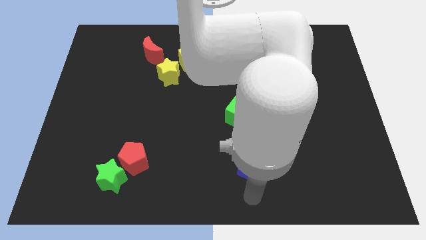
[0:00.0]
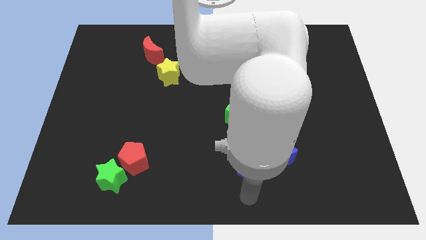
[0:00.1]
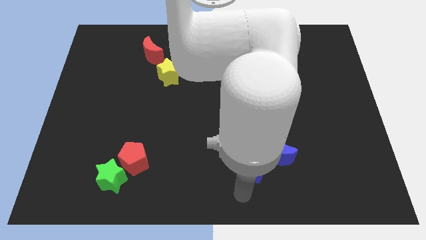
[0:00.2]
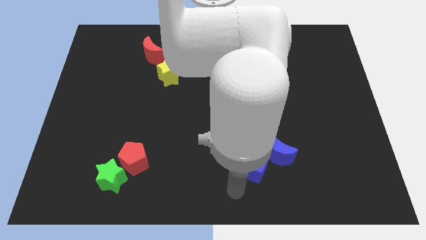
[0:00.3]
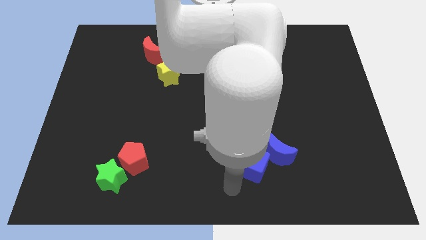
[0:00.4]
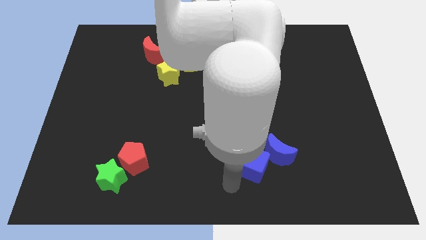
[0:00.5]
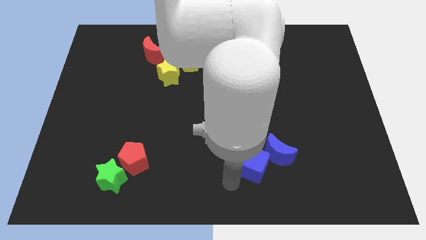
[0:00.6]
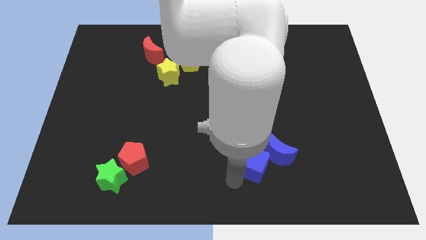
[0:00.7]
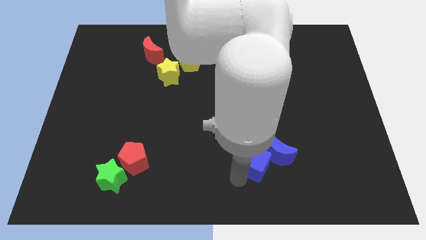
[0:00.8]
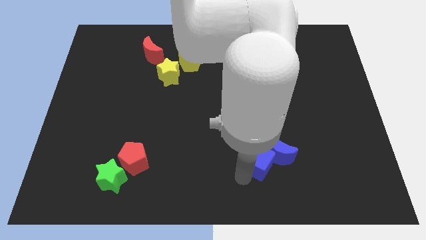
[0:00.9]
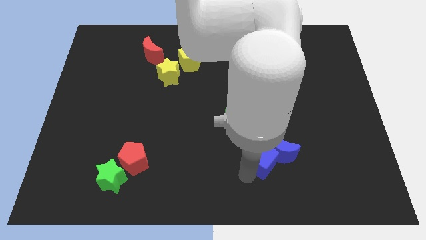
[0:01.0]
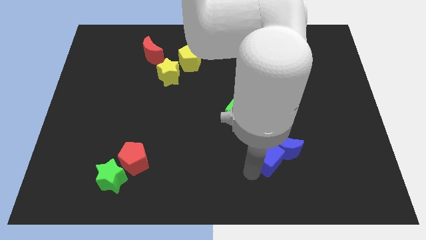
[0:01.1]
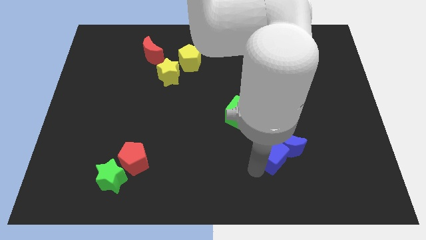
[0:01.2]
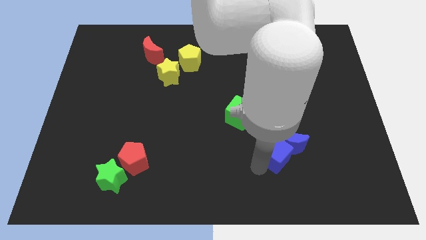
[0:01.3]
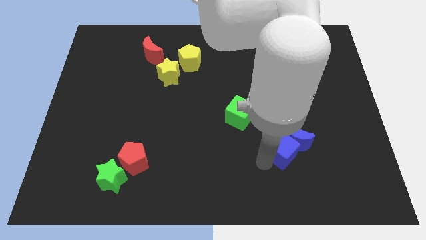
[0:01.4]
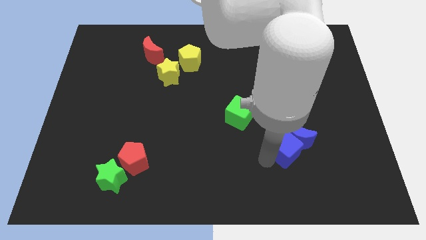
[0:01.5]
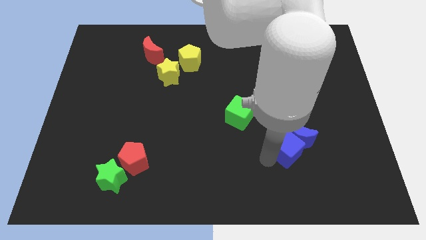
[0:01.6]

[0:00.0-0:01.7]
push blue cube and blue crescent towards left side of the board

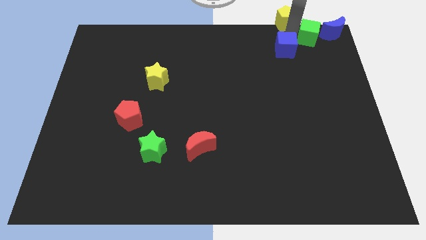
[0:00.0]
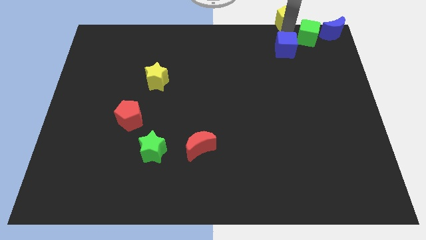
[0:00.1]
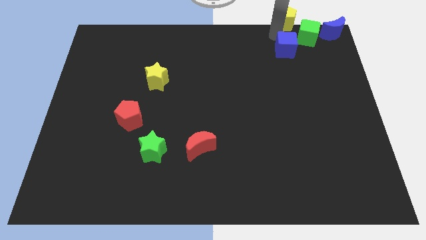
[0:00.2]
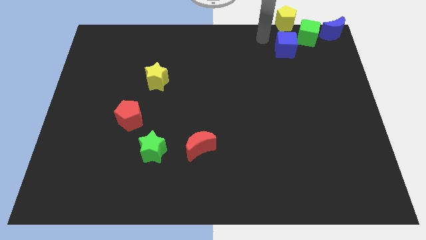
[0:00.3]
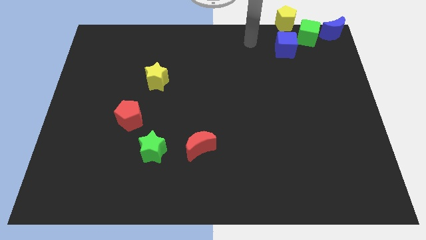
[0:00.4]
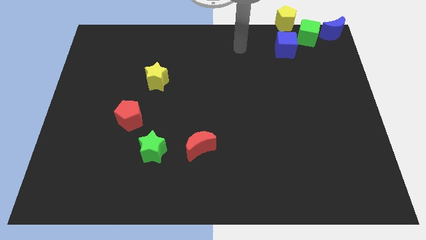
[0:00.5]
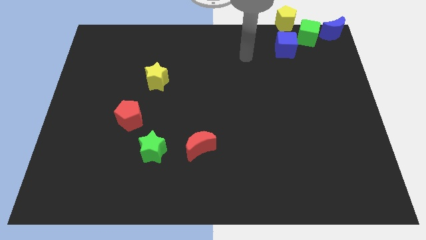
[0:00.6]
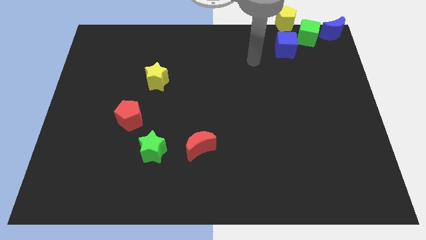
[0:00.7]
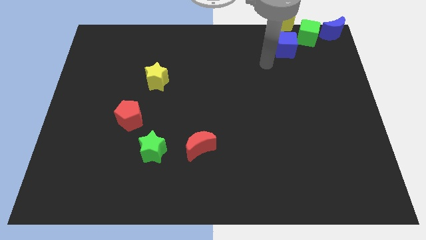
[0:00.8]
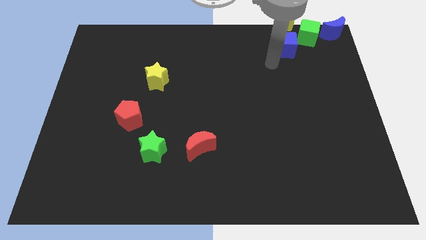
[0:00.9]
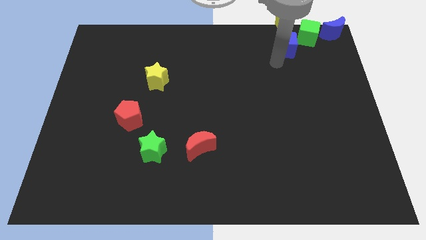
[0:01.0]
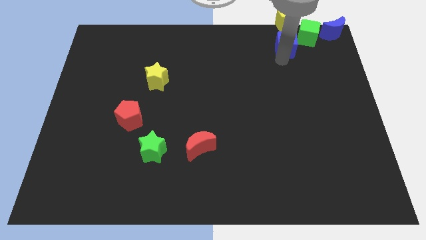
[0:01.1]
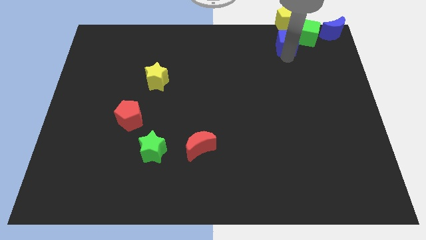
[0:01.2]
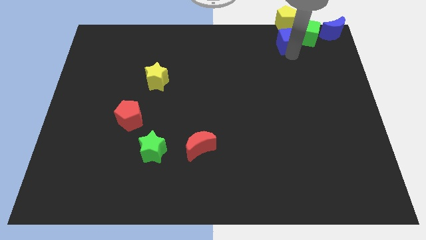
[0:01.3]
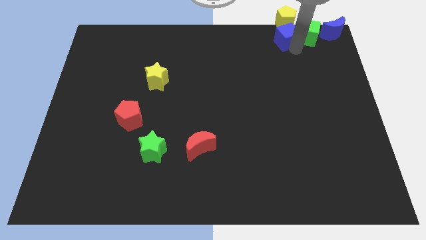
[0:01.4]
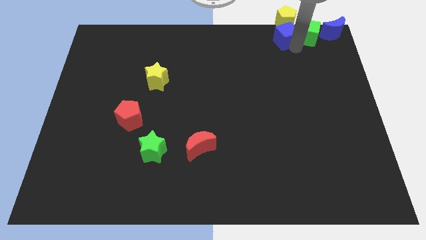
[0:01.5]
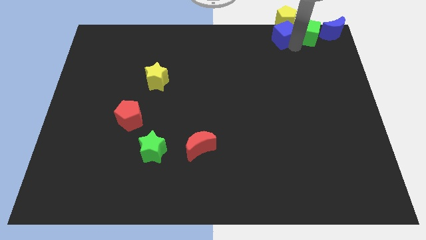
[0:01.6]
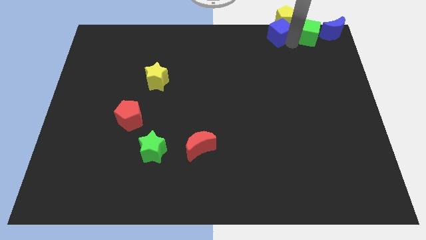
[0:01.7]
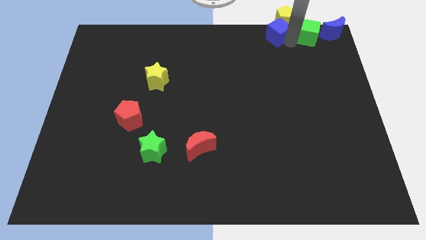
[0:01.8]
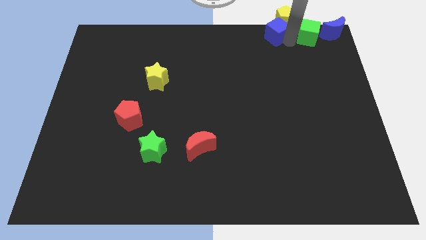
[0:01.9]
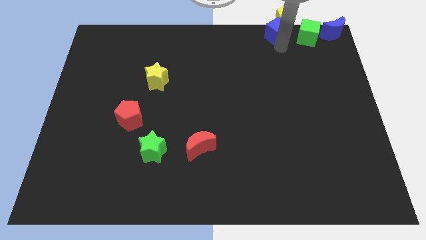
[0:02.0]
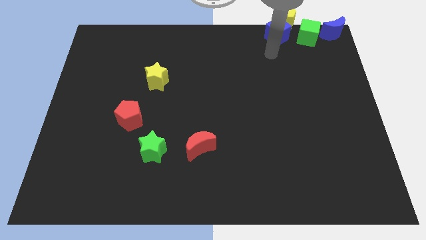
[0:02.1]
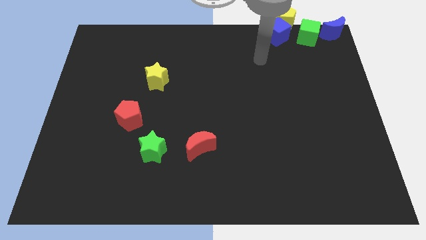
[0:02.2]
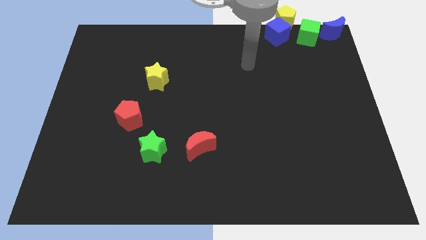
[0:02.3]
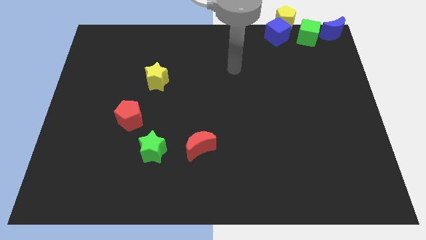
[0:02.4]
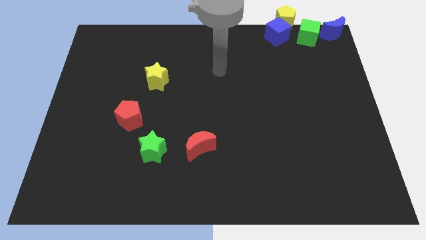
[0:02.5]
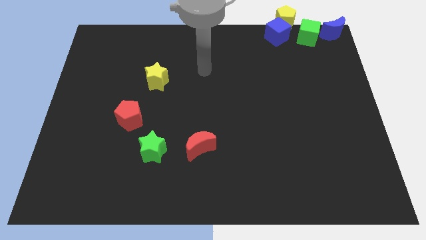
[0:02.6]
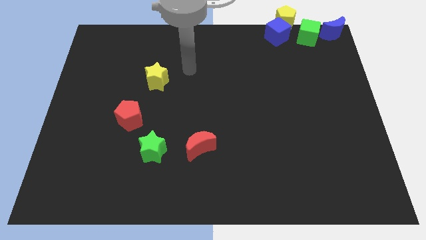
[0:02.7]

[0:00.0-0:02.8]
push the blue cube into the yellow pentagon

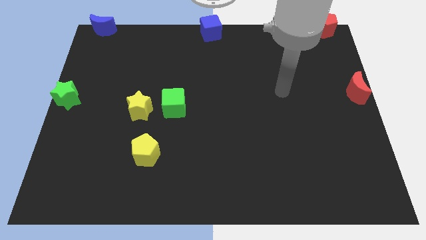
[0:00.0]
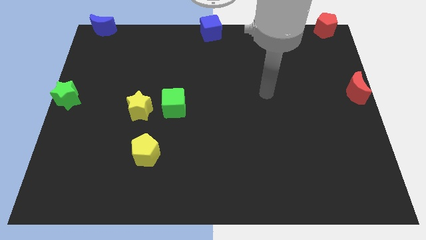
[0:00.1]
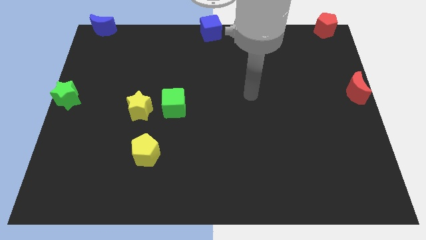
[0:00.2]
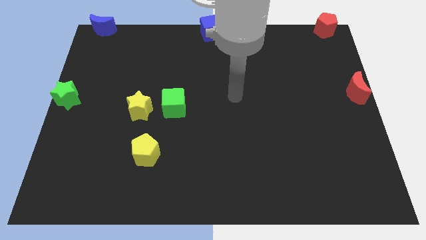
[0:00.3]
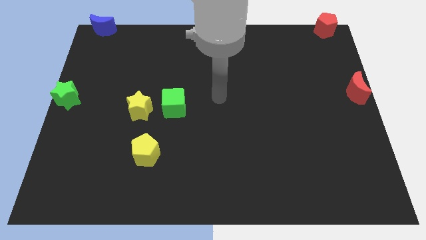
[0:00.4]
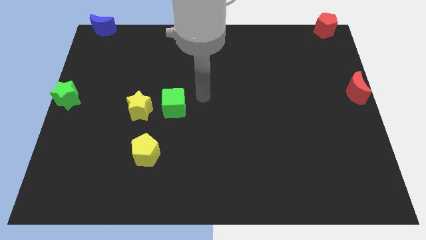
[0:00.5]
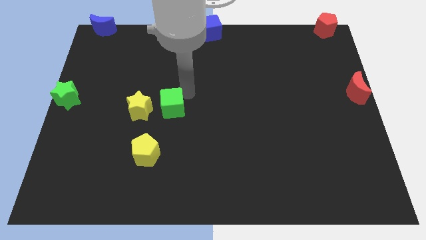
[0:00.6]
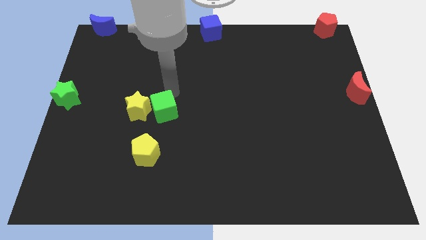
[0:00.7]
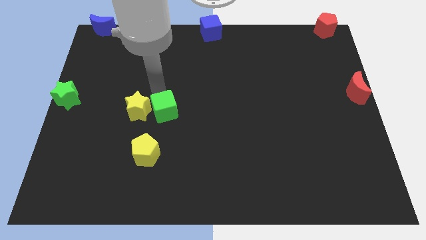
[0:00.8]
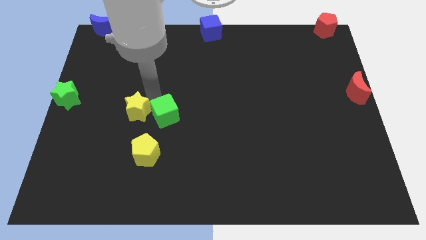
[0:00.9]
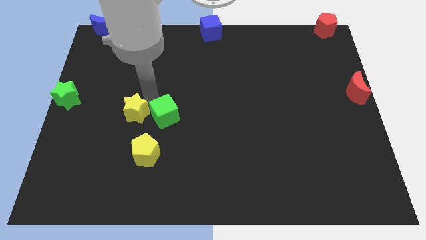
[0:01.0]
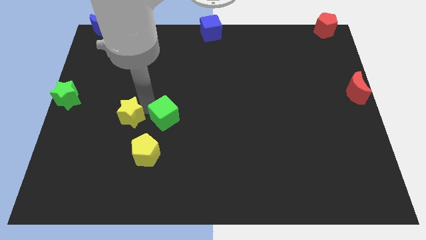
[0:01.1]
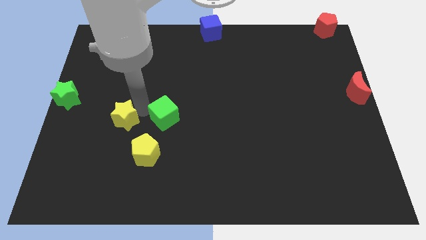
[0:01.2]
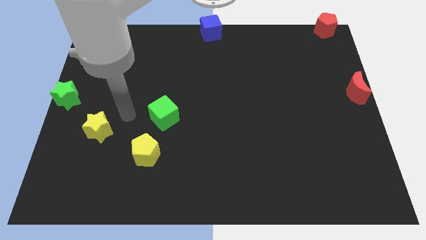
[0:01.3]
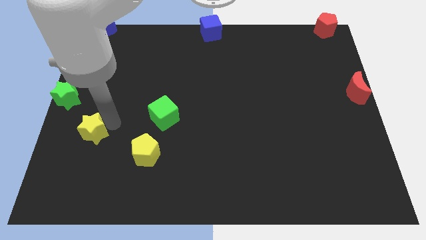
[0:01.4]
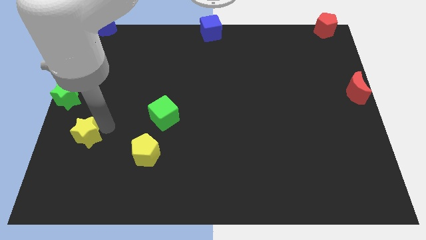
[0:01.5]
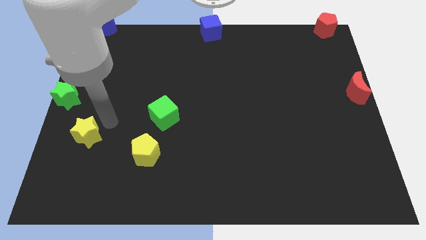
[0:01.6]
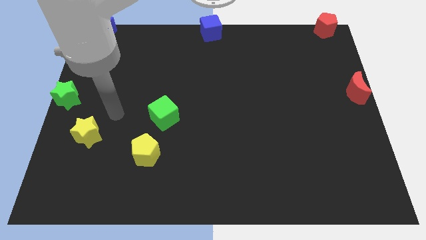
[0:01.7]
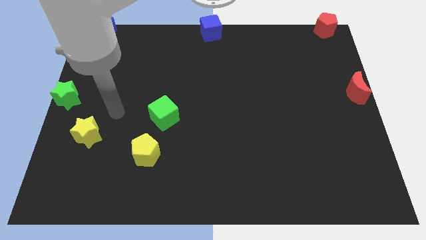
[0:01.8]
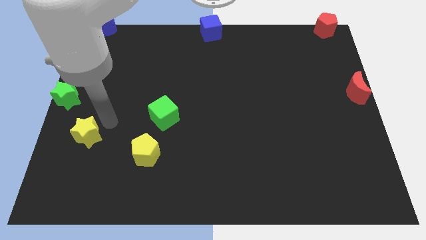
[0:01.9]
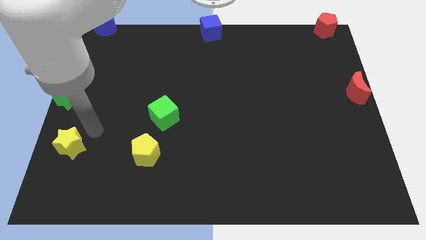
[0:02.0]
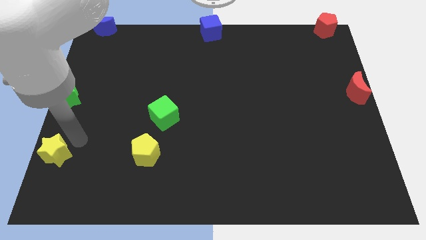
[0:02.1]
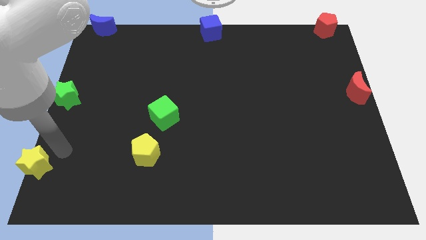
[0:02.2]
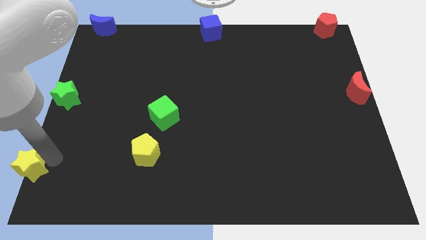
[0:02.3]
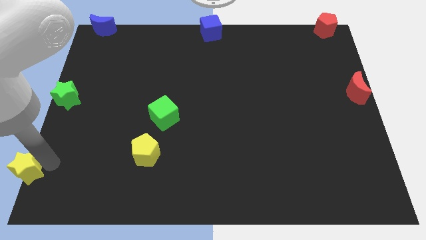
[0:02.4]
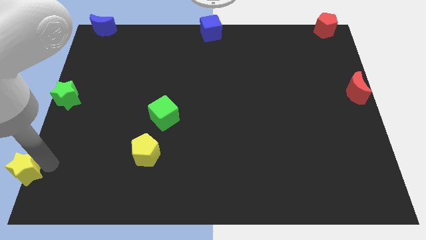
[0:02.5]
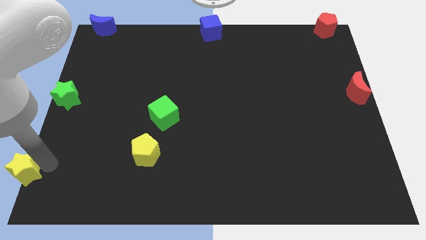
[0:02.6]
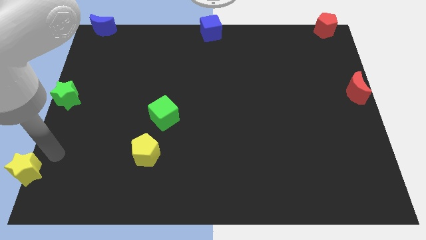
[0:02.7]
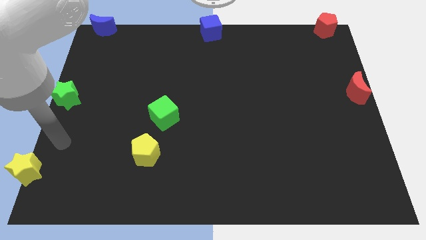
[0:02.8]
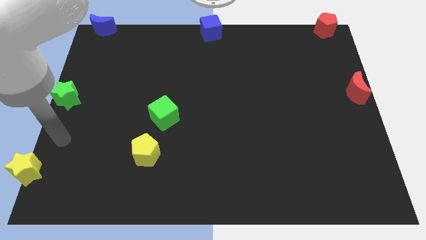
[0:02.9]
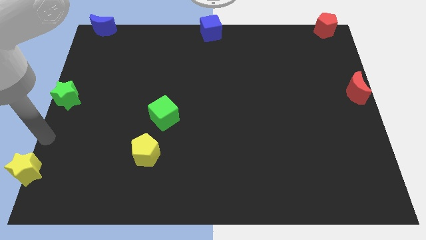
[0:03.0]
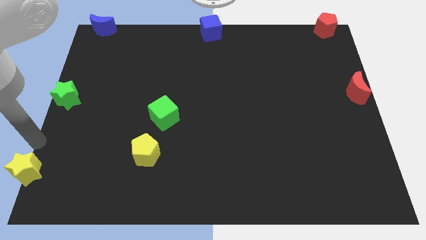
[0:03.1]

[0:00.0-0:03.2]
push the yellow star towards the bottom left

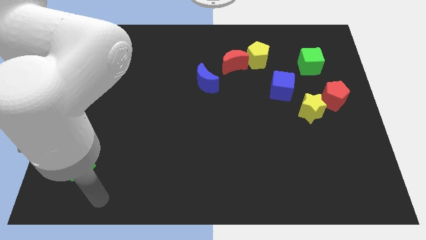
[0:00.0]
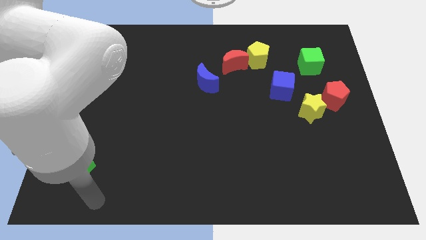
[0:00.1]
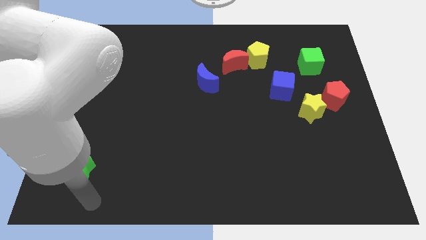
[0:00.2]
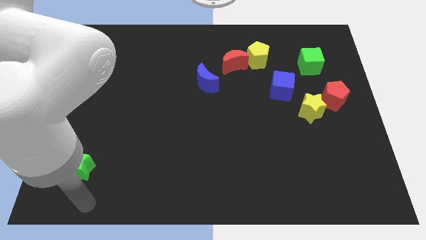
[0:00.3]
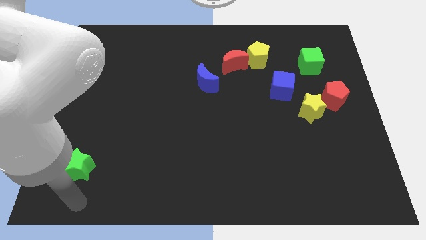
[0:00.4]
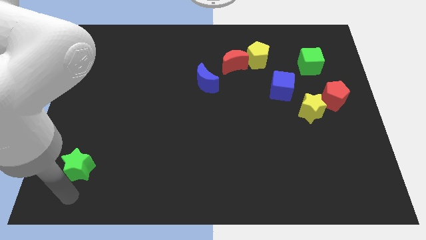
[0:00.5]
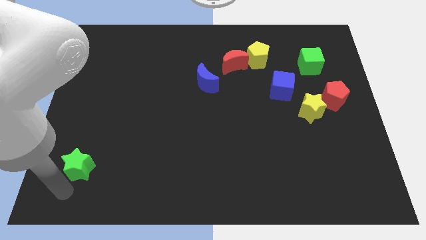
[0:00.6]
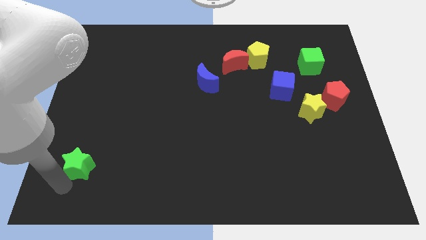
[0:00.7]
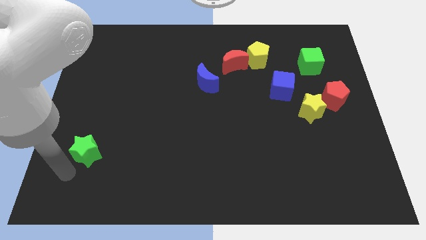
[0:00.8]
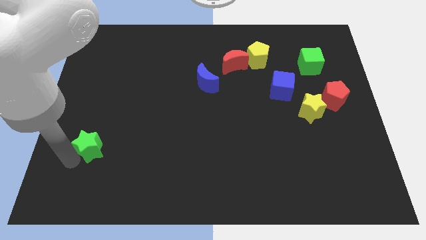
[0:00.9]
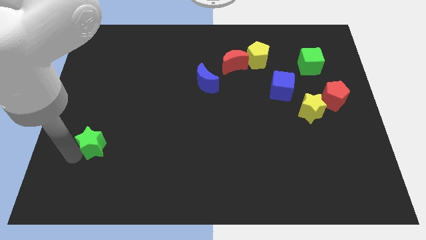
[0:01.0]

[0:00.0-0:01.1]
tap bottom left side of green star

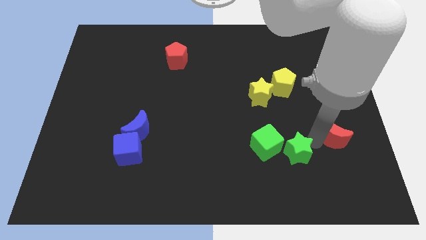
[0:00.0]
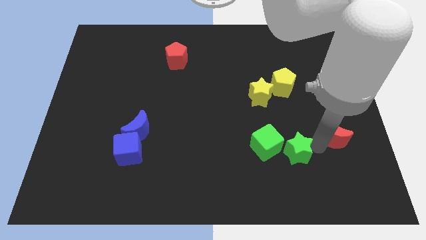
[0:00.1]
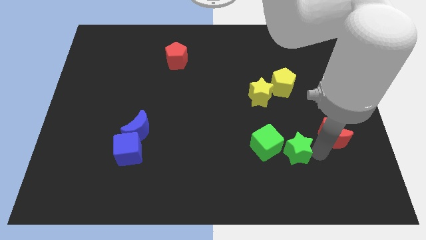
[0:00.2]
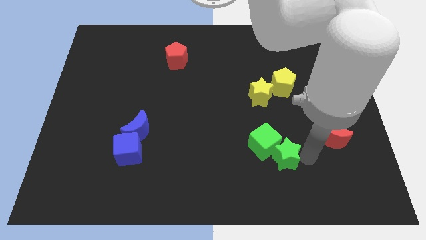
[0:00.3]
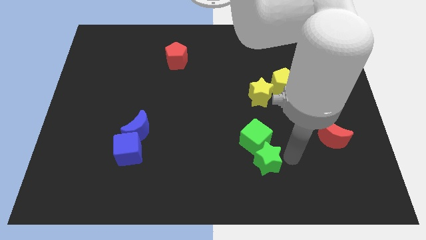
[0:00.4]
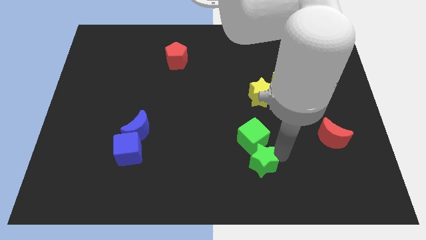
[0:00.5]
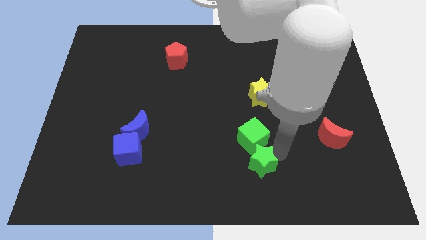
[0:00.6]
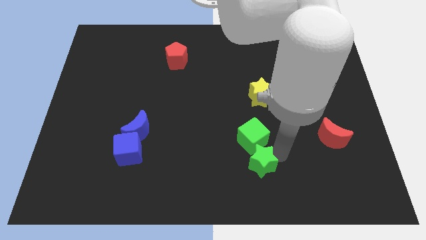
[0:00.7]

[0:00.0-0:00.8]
slide the green star below to the green cube
